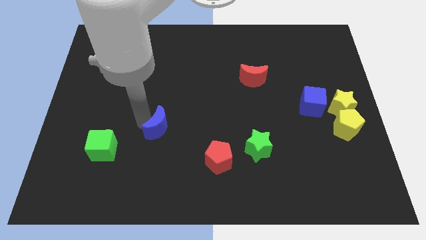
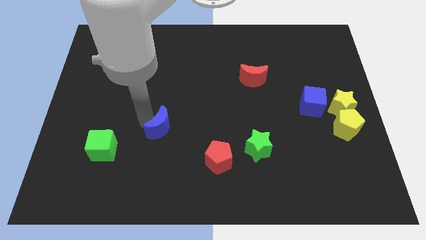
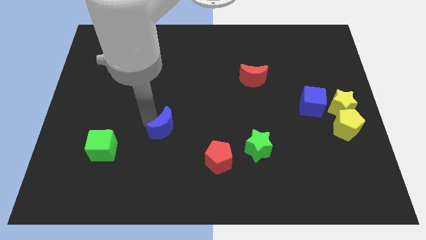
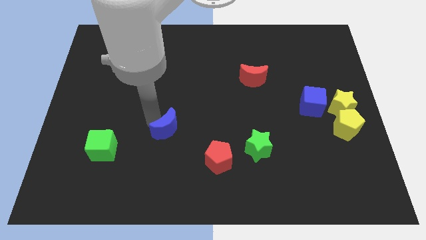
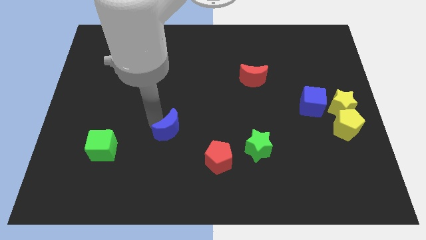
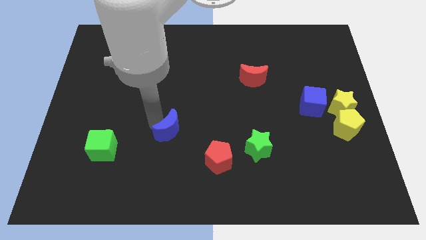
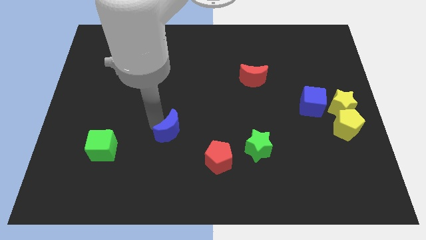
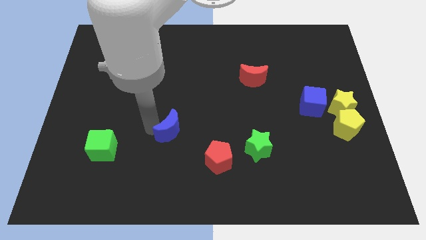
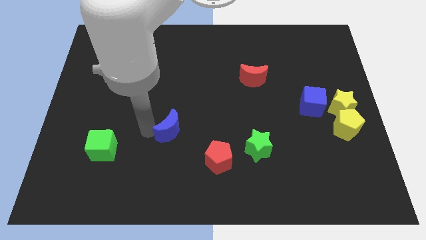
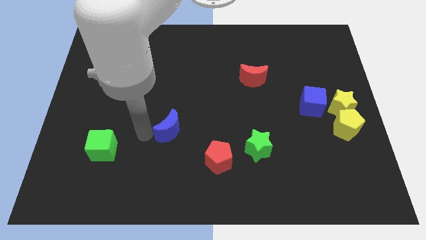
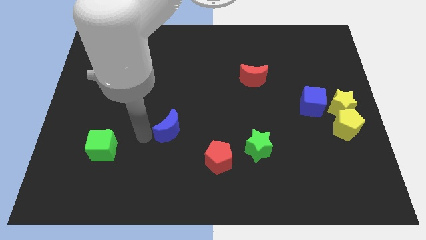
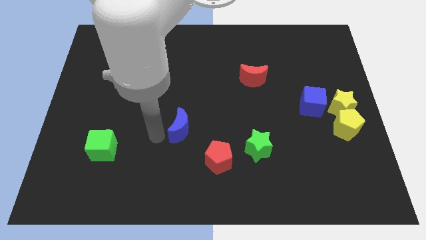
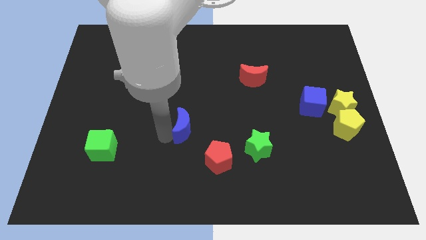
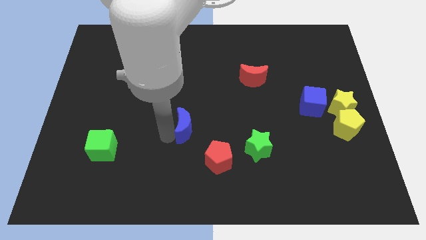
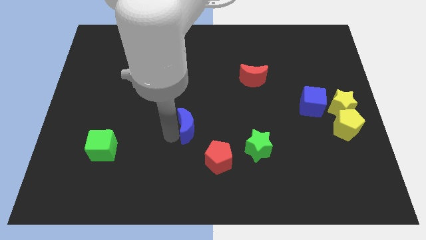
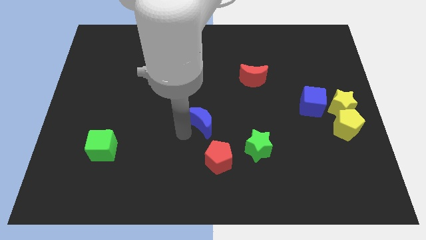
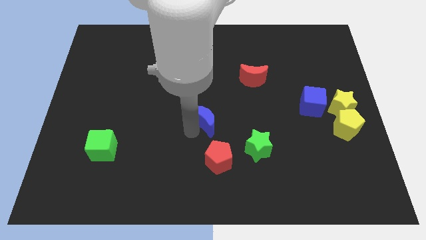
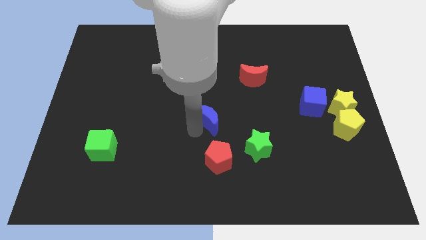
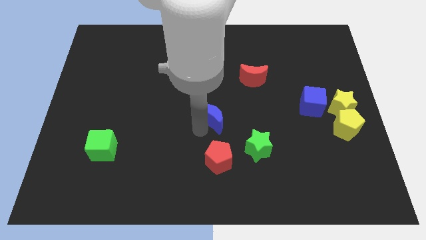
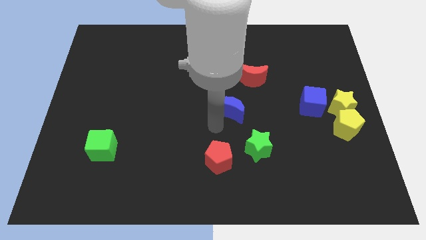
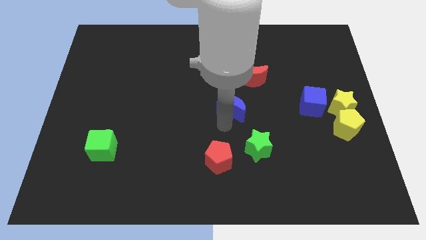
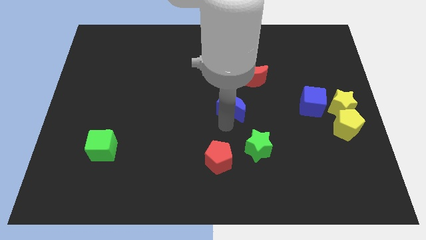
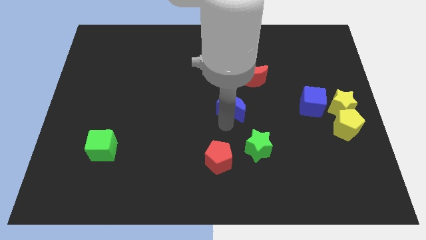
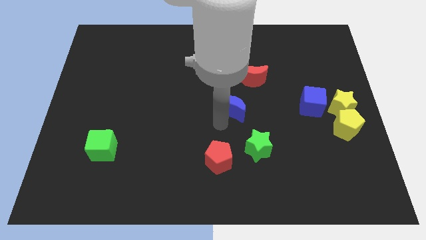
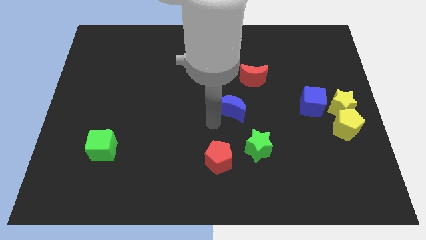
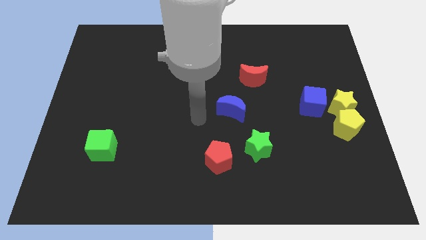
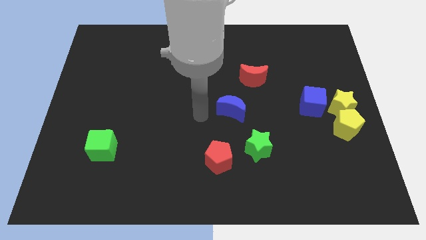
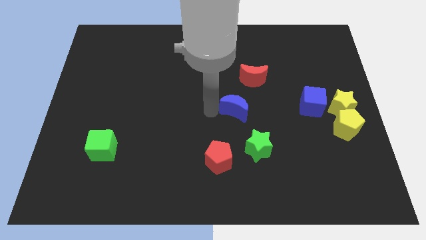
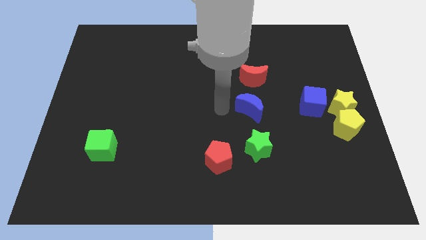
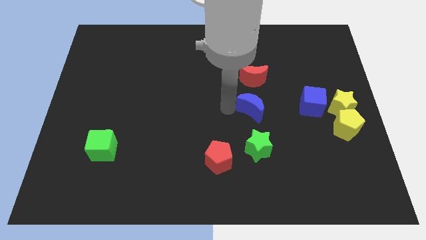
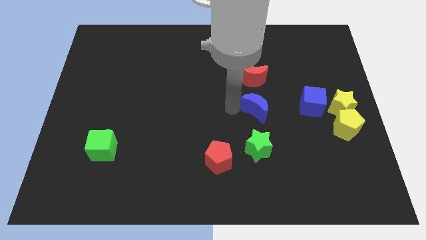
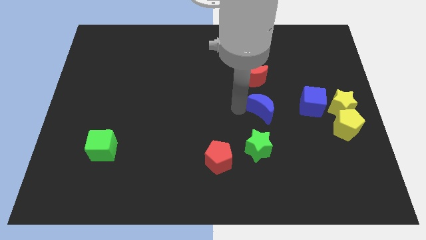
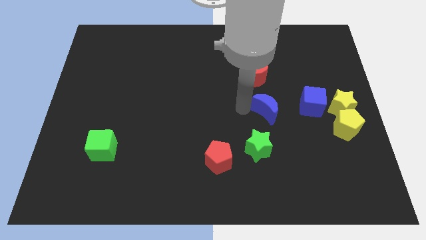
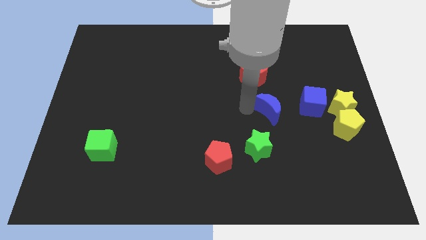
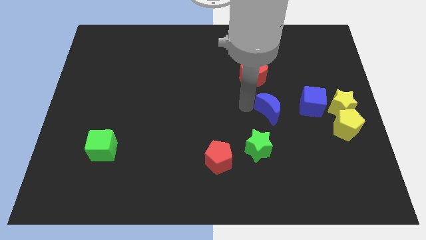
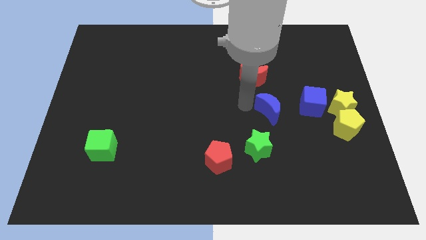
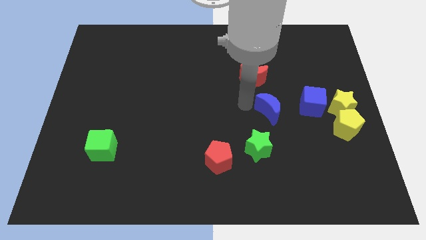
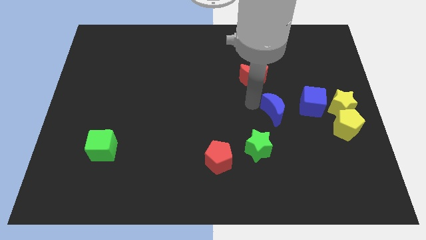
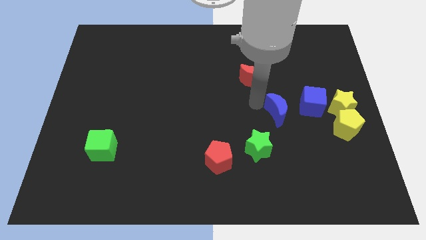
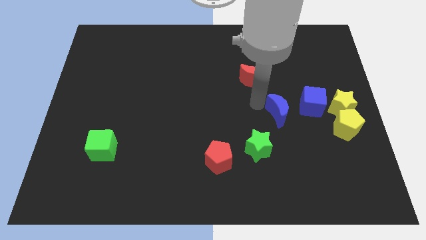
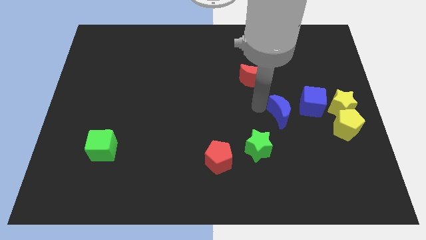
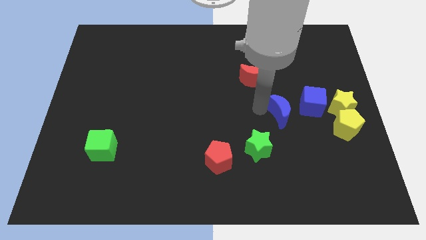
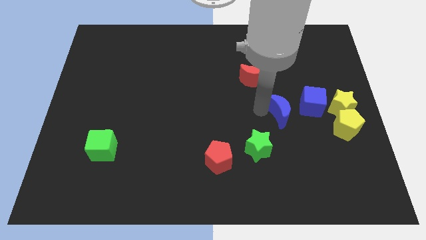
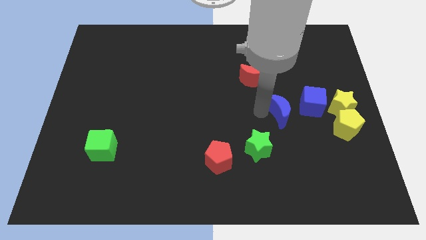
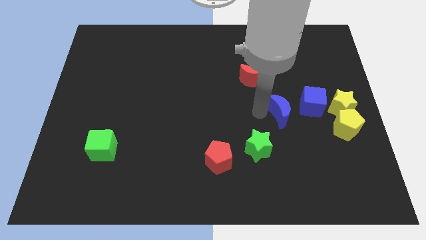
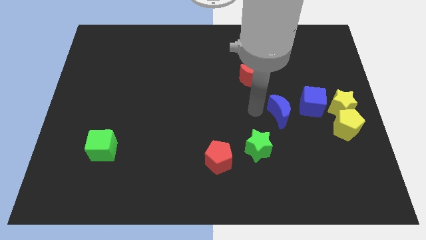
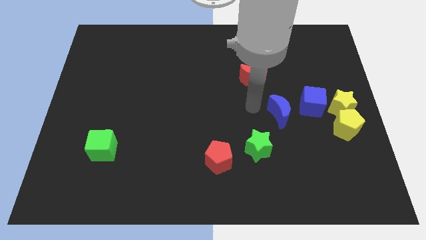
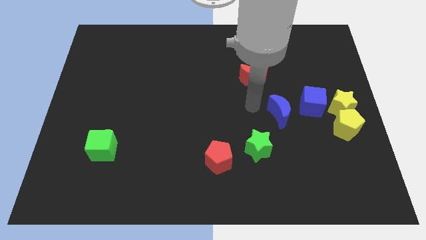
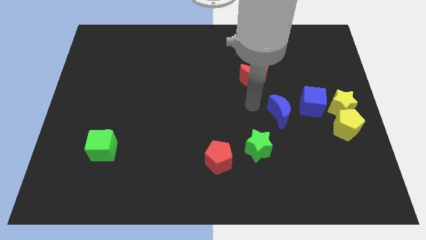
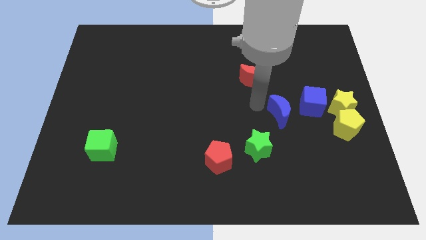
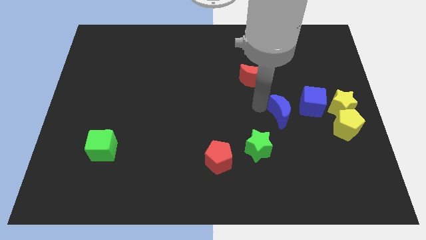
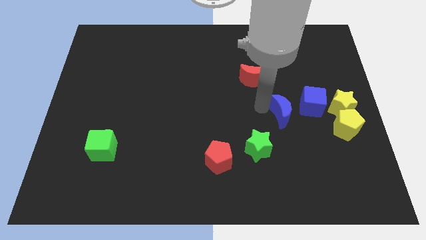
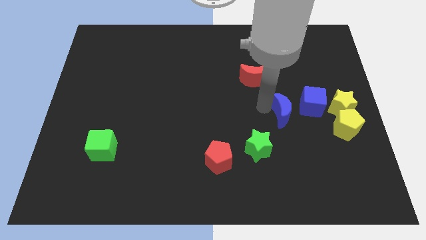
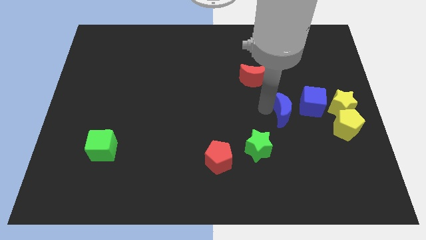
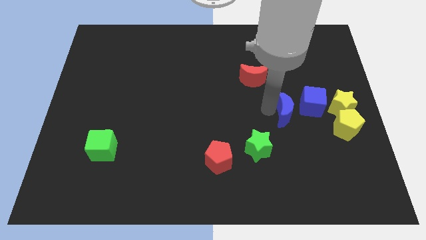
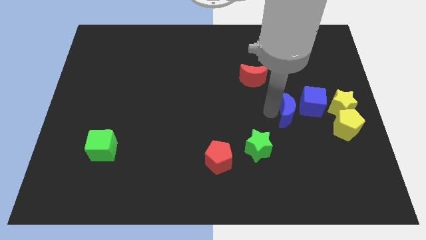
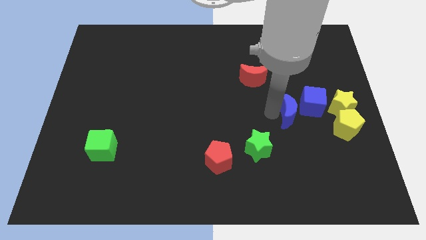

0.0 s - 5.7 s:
push the blue moon to the left of the blue cube

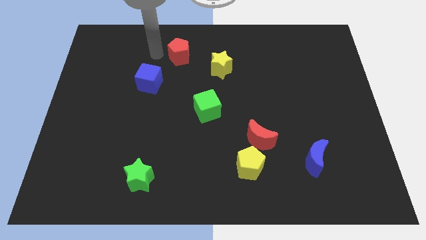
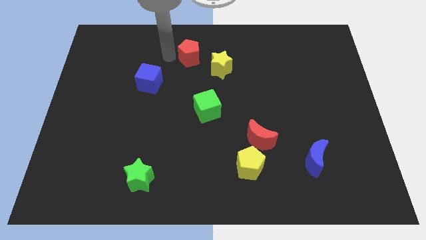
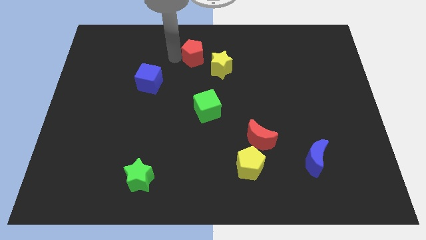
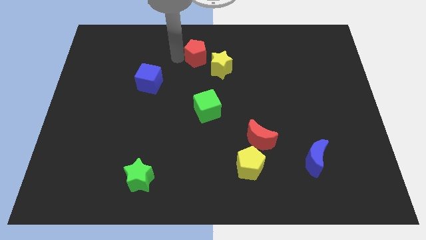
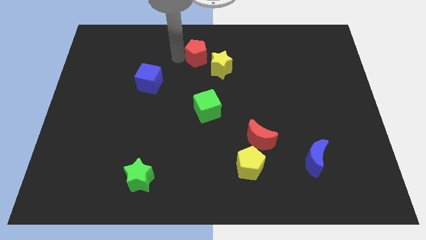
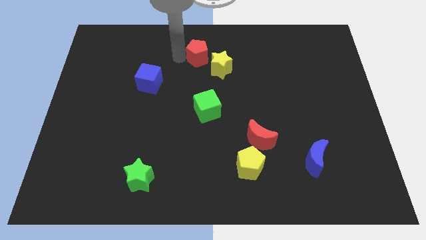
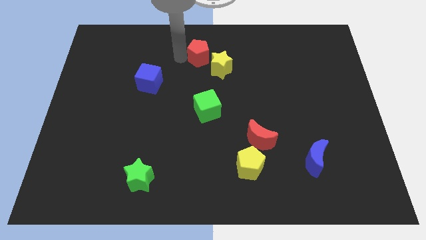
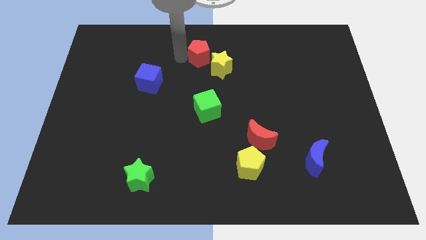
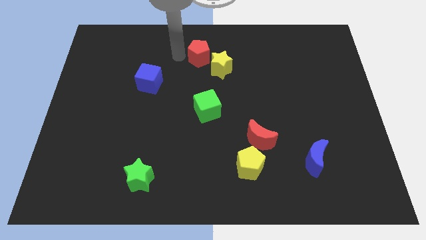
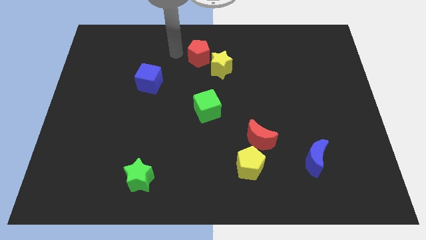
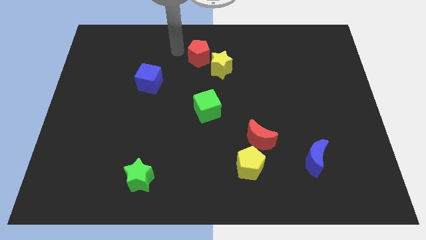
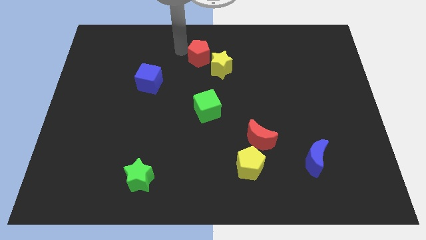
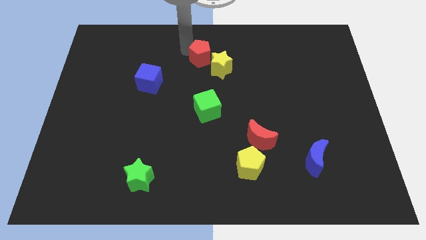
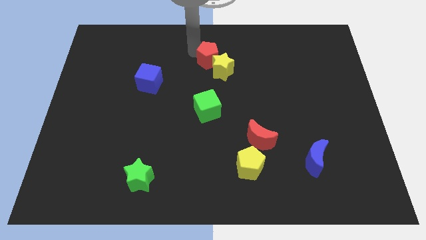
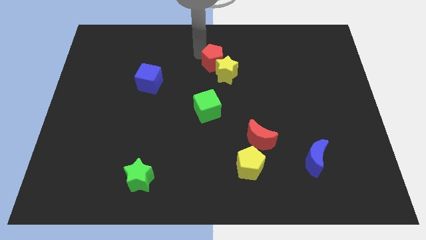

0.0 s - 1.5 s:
push the red pentagon to the right

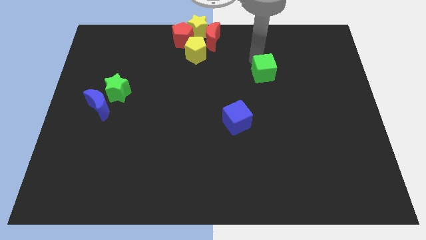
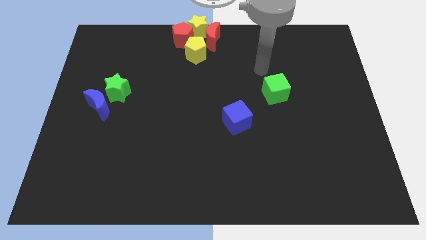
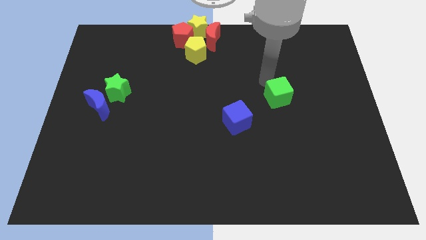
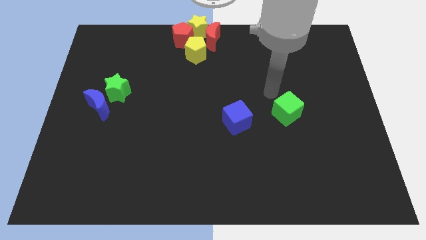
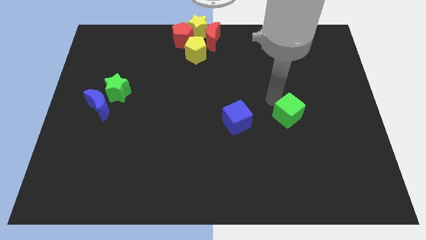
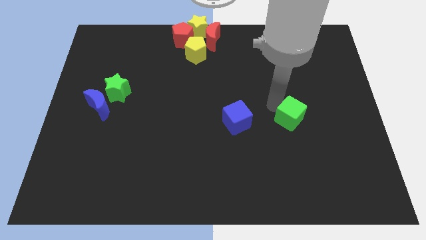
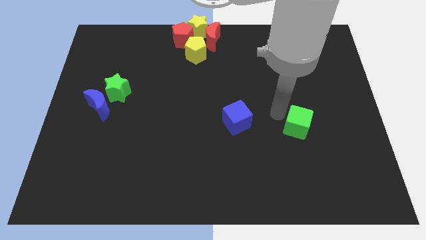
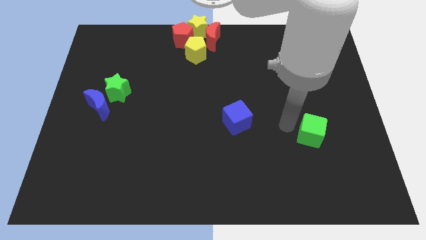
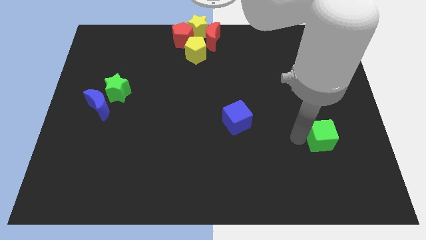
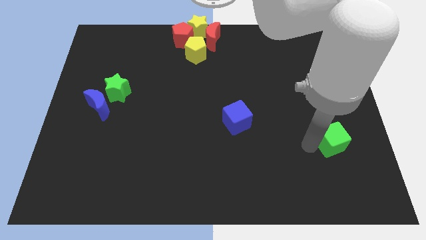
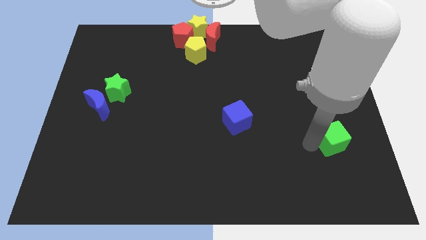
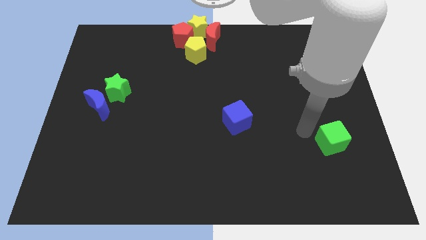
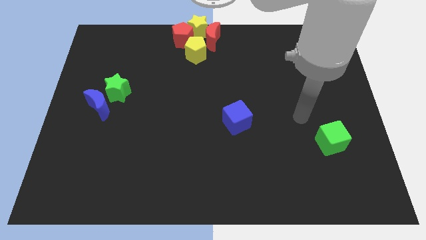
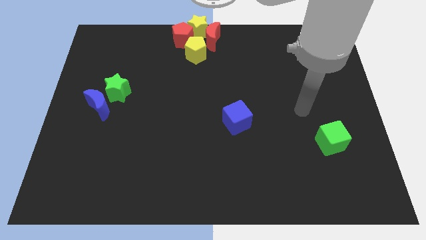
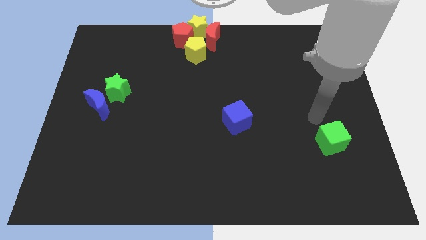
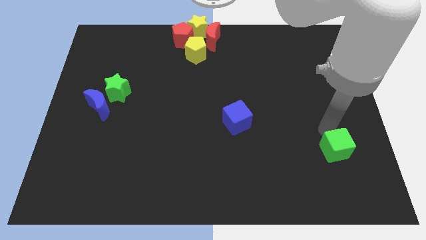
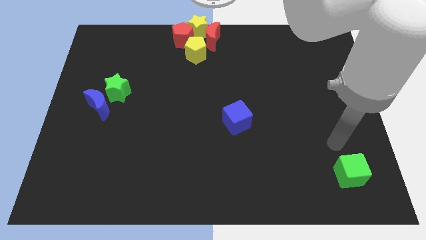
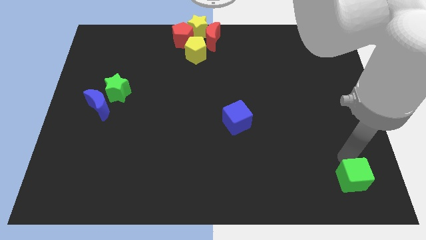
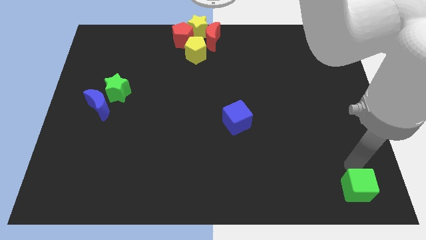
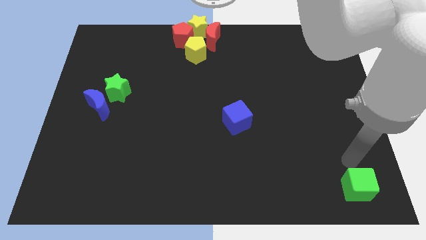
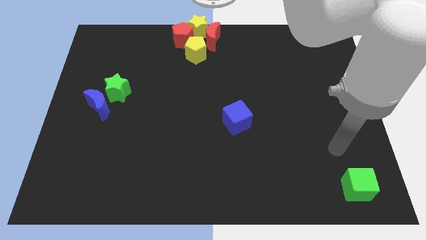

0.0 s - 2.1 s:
move the green cube towards bottom right side
